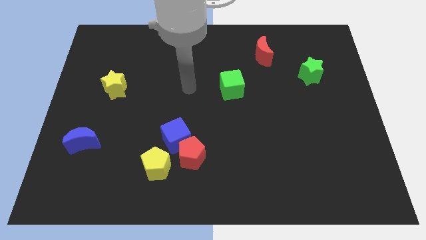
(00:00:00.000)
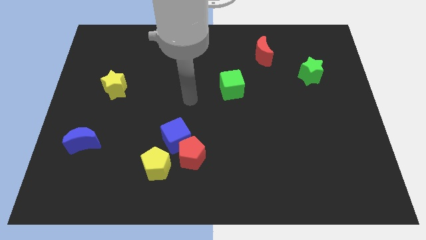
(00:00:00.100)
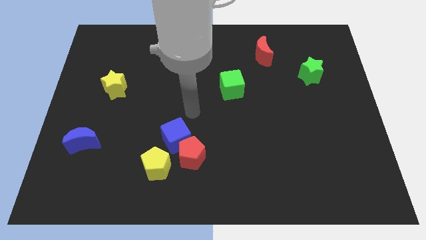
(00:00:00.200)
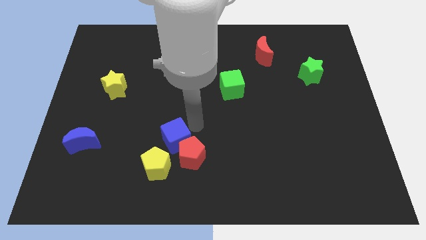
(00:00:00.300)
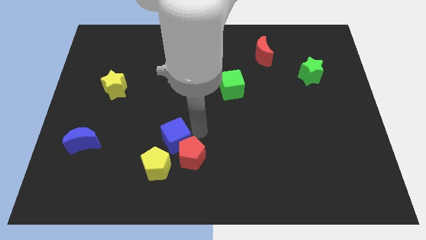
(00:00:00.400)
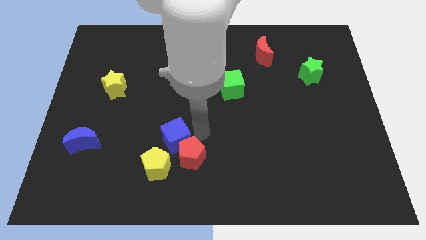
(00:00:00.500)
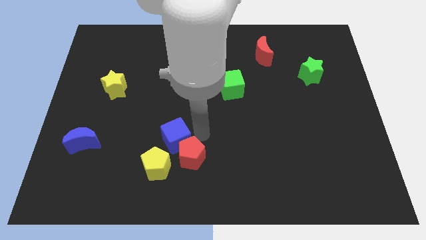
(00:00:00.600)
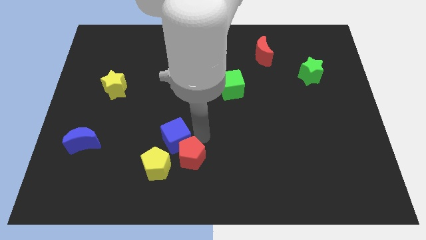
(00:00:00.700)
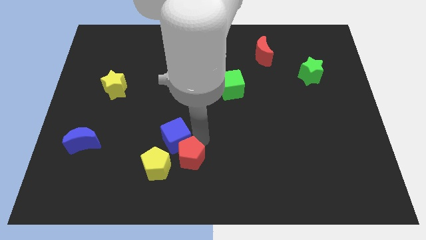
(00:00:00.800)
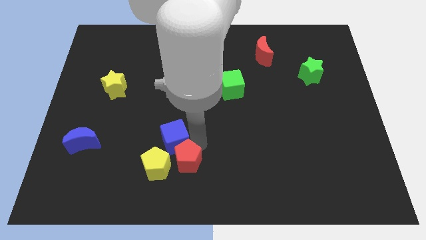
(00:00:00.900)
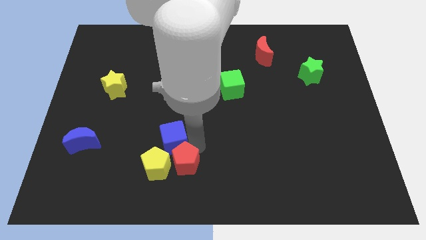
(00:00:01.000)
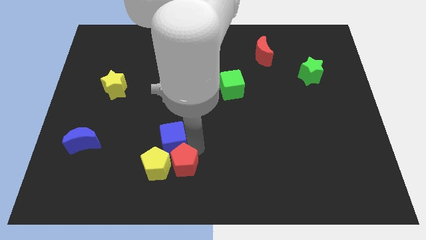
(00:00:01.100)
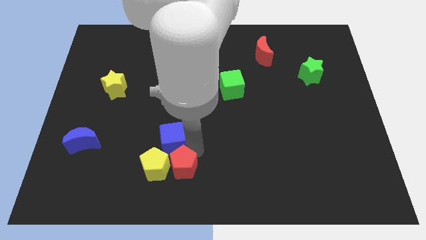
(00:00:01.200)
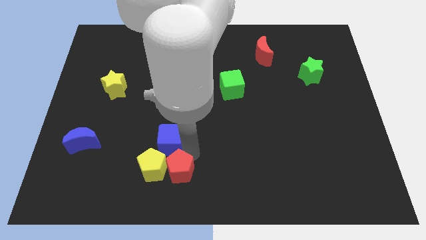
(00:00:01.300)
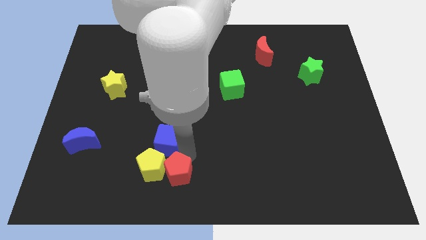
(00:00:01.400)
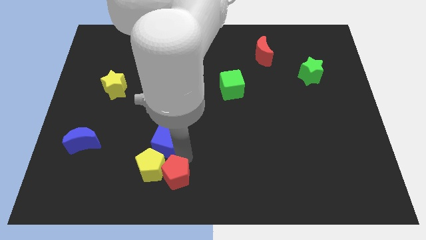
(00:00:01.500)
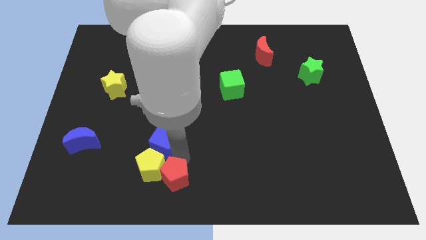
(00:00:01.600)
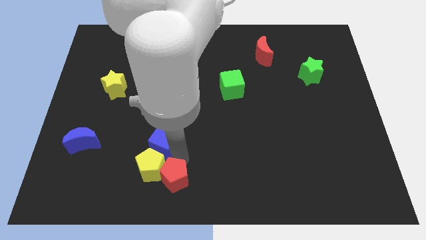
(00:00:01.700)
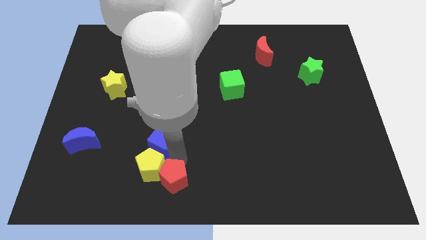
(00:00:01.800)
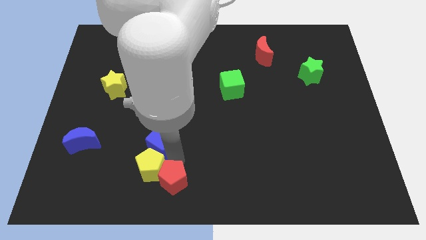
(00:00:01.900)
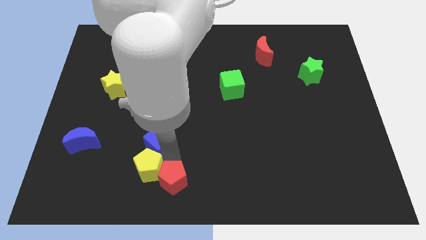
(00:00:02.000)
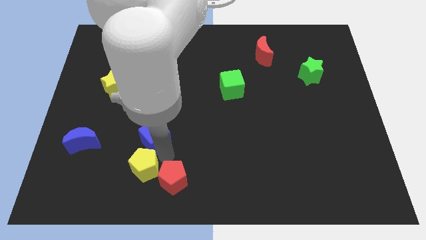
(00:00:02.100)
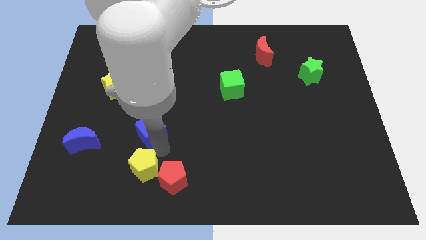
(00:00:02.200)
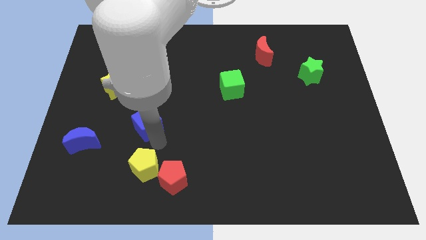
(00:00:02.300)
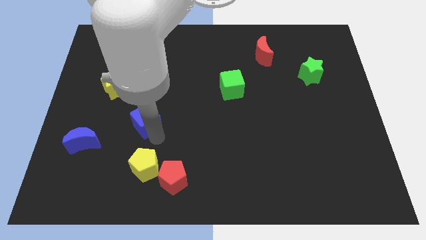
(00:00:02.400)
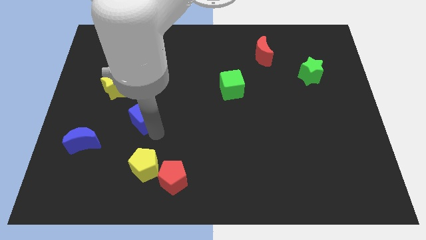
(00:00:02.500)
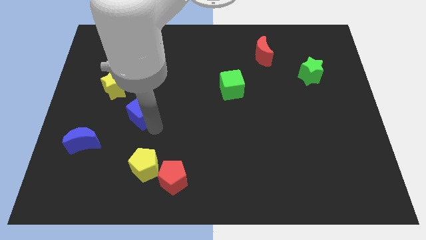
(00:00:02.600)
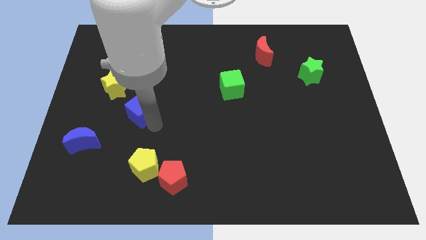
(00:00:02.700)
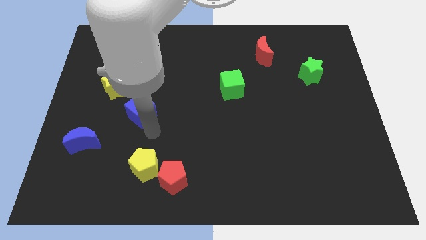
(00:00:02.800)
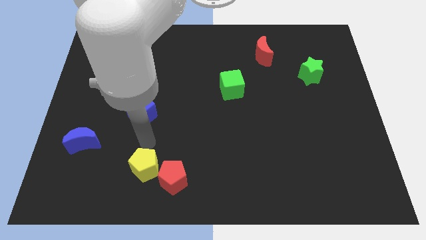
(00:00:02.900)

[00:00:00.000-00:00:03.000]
separate the blue cube from red and yellow pentagons

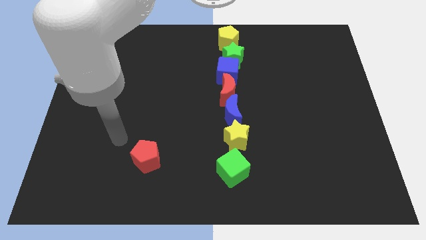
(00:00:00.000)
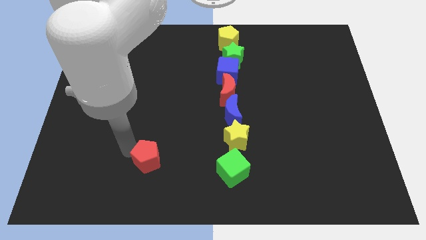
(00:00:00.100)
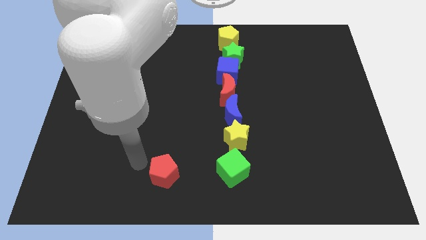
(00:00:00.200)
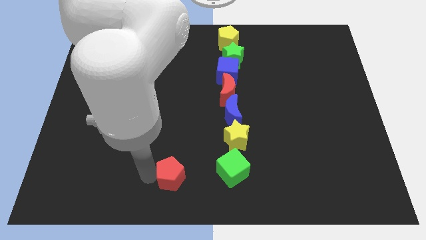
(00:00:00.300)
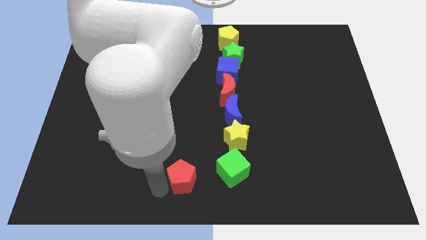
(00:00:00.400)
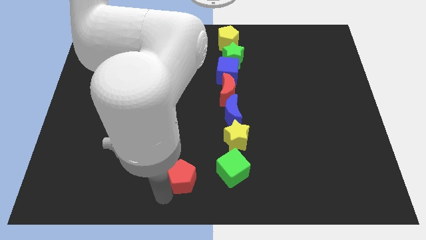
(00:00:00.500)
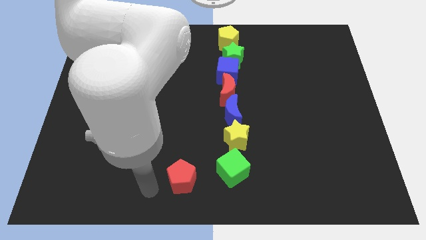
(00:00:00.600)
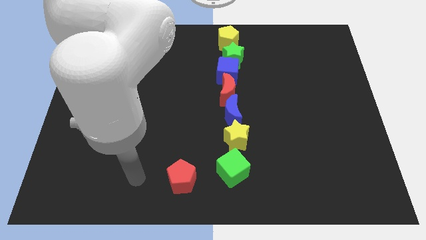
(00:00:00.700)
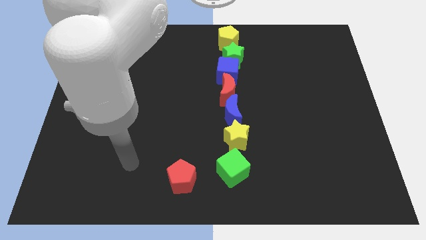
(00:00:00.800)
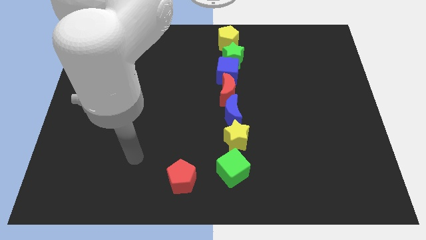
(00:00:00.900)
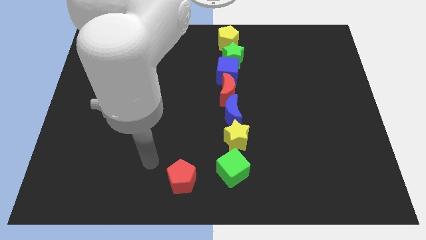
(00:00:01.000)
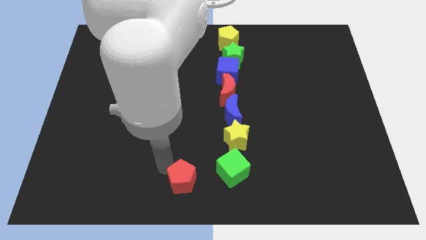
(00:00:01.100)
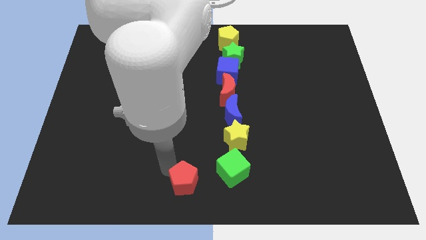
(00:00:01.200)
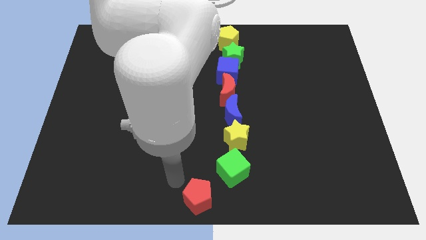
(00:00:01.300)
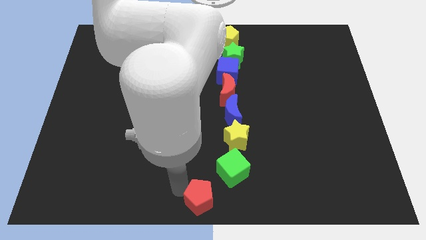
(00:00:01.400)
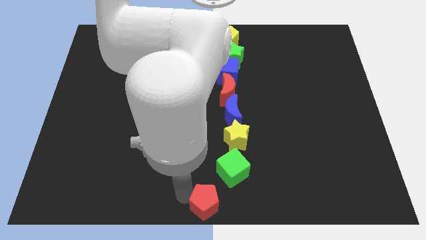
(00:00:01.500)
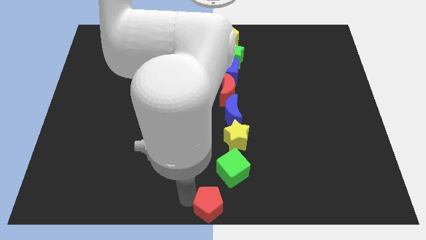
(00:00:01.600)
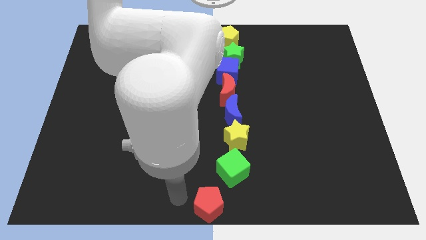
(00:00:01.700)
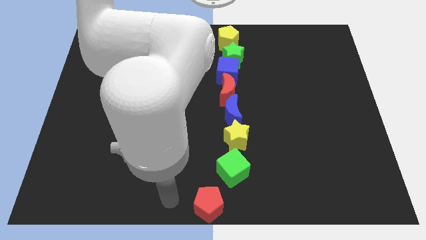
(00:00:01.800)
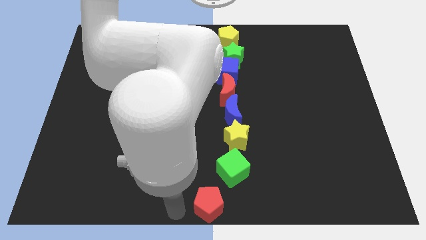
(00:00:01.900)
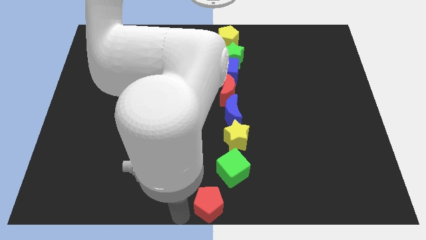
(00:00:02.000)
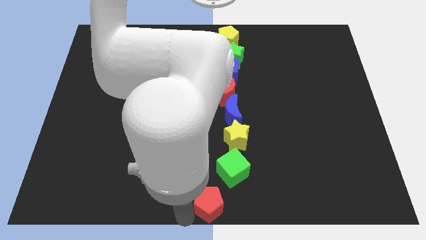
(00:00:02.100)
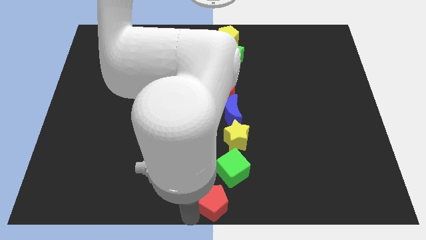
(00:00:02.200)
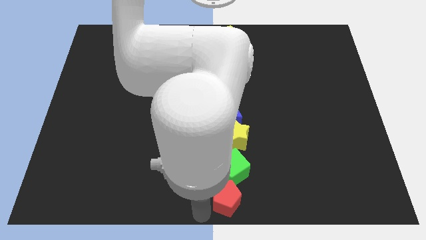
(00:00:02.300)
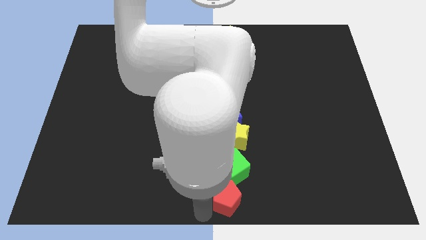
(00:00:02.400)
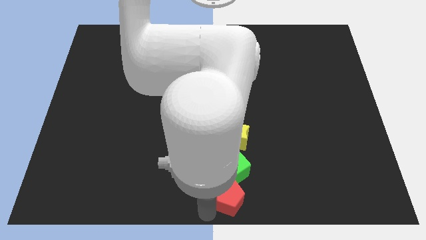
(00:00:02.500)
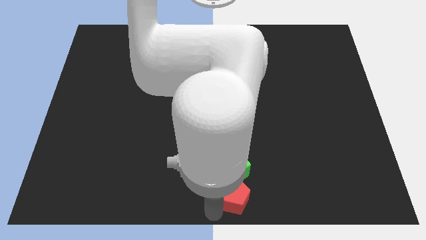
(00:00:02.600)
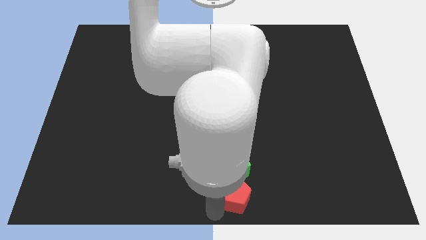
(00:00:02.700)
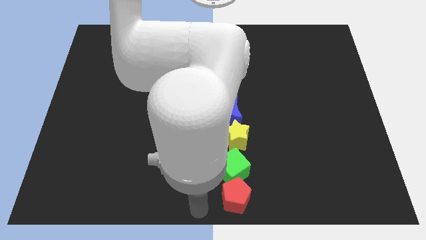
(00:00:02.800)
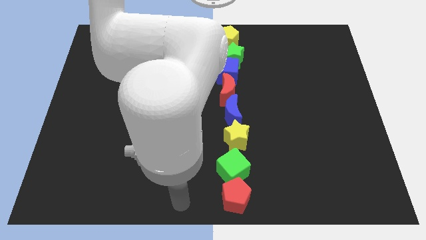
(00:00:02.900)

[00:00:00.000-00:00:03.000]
move the red pentagon to the bottom center of the board

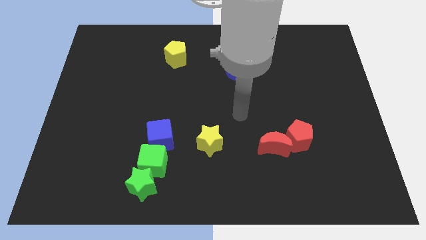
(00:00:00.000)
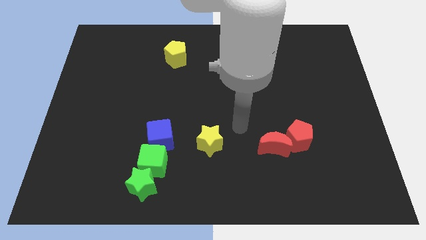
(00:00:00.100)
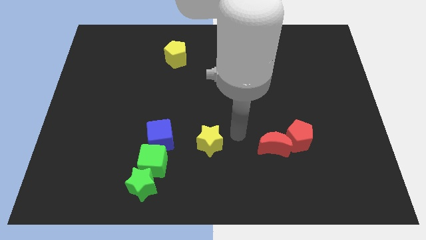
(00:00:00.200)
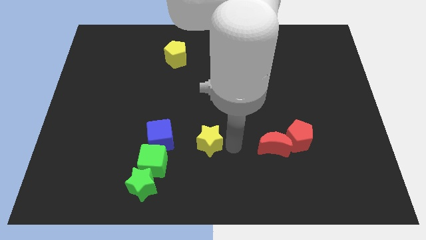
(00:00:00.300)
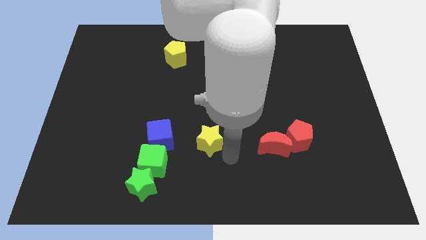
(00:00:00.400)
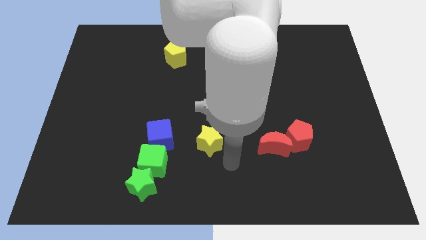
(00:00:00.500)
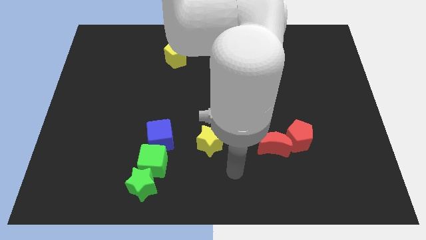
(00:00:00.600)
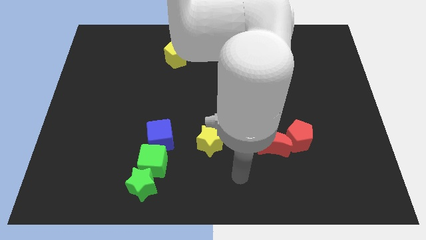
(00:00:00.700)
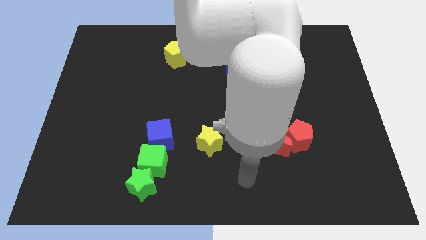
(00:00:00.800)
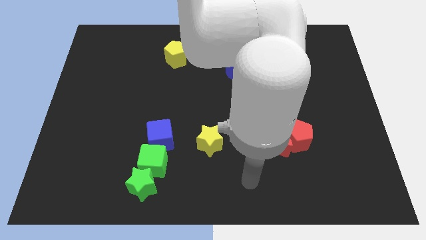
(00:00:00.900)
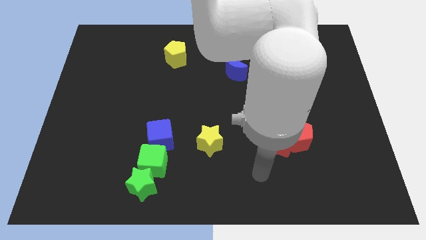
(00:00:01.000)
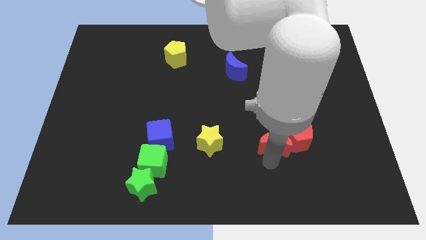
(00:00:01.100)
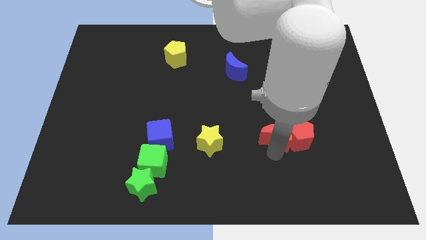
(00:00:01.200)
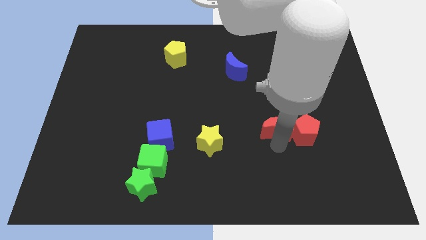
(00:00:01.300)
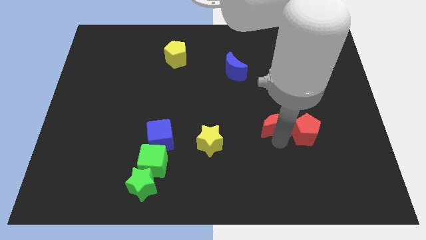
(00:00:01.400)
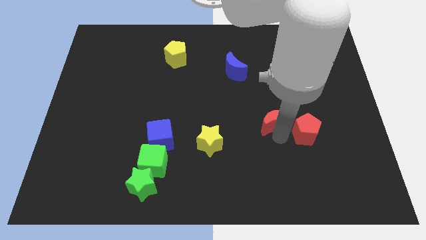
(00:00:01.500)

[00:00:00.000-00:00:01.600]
move the red crescent to the left of the red pentagon

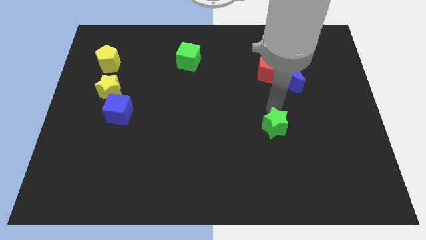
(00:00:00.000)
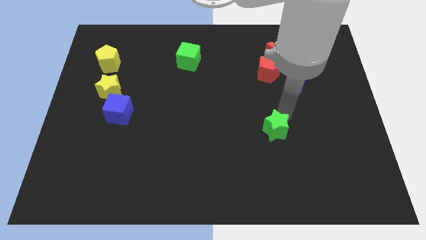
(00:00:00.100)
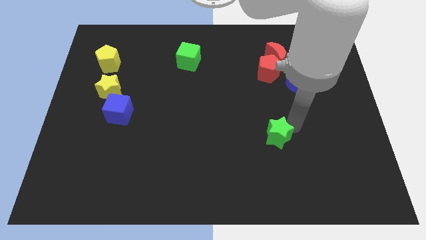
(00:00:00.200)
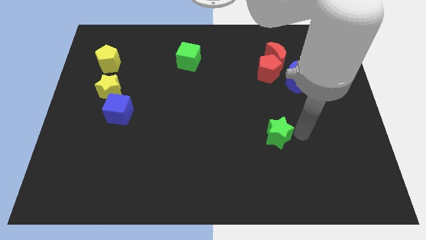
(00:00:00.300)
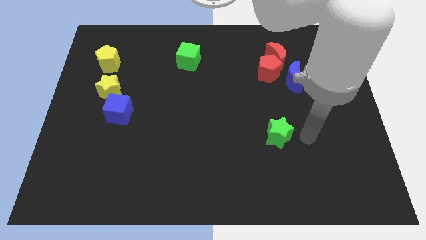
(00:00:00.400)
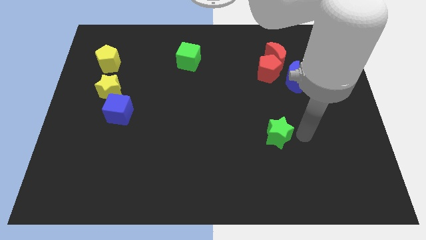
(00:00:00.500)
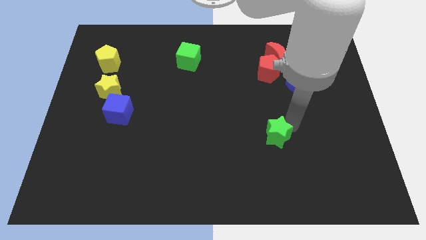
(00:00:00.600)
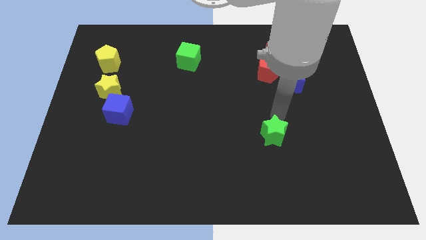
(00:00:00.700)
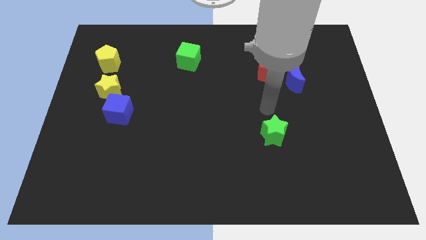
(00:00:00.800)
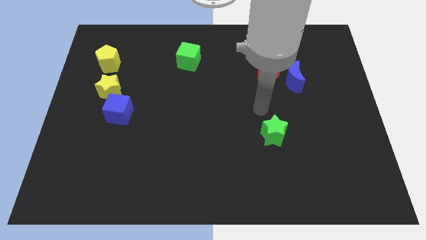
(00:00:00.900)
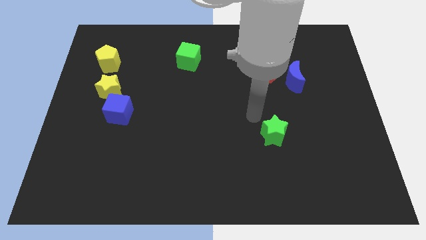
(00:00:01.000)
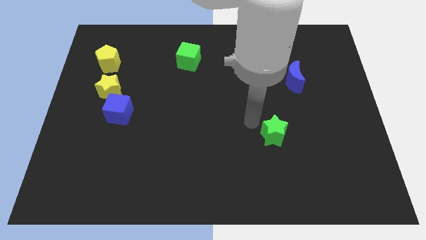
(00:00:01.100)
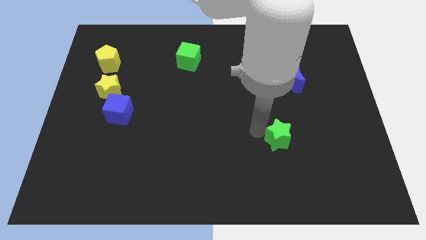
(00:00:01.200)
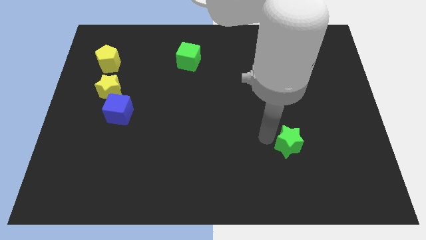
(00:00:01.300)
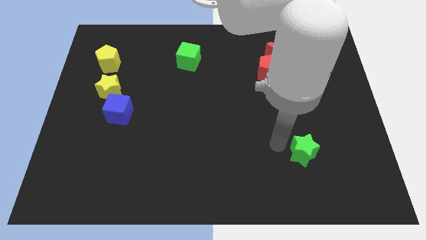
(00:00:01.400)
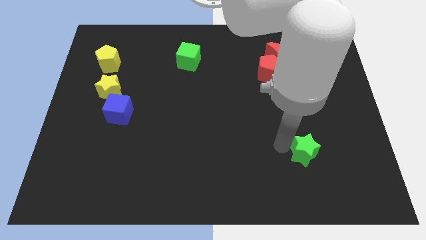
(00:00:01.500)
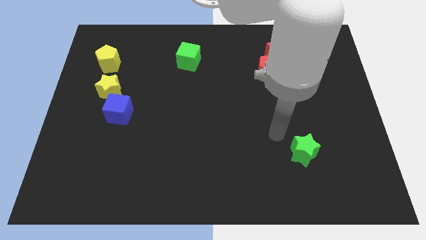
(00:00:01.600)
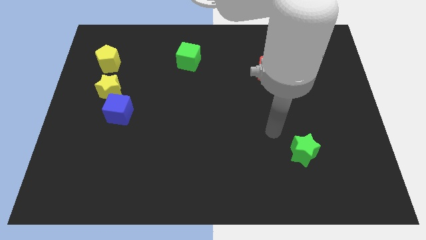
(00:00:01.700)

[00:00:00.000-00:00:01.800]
place green star vertically to the bottom of blue moon
